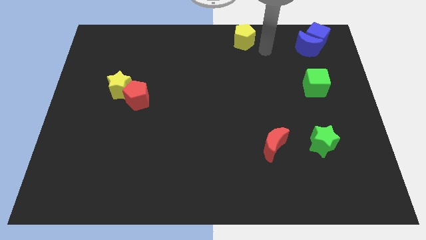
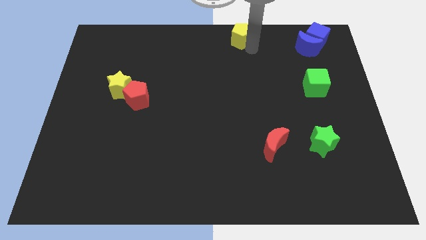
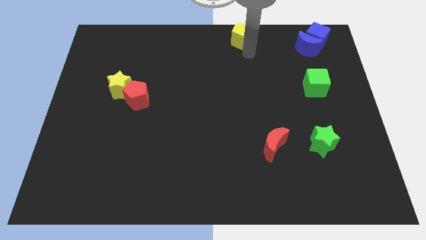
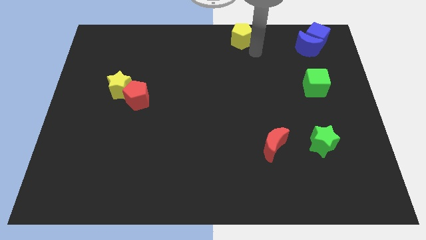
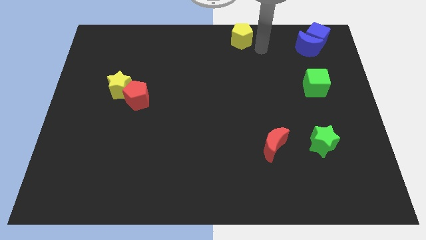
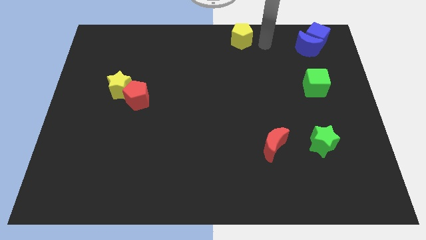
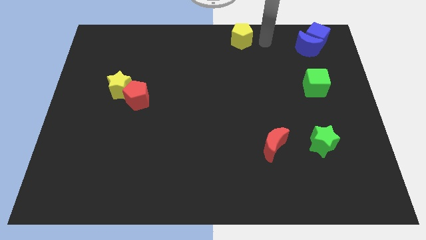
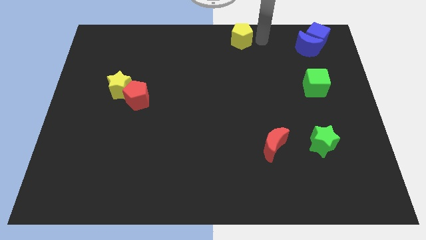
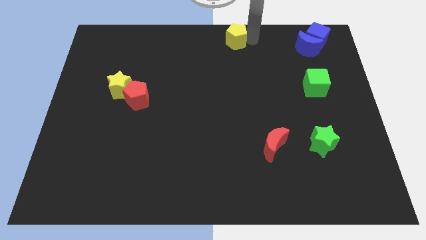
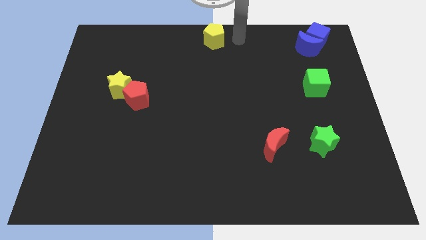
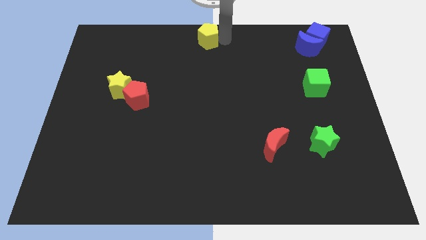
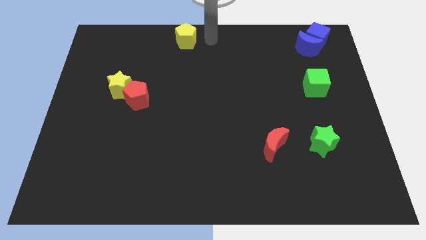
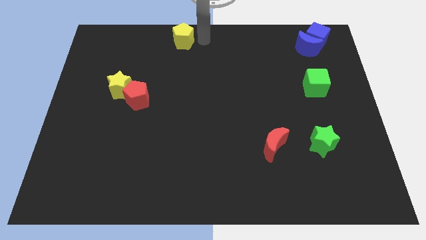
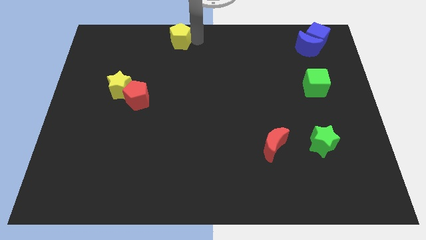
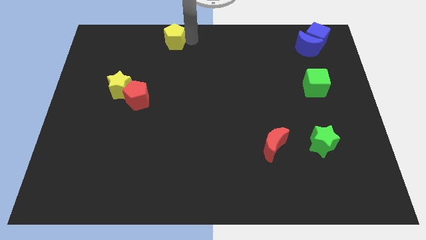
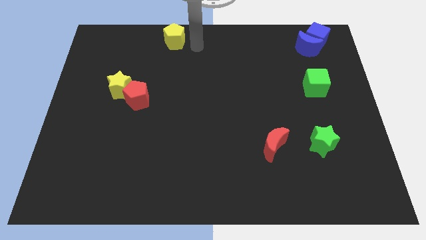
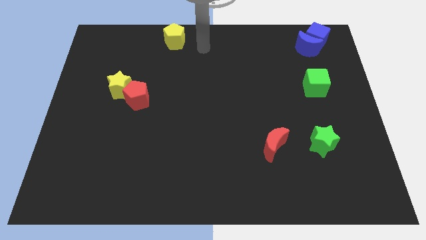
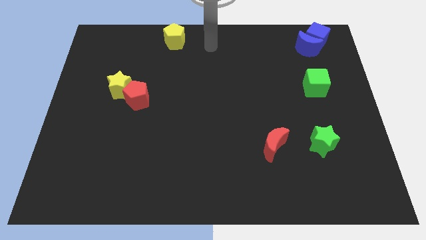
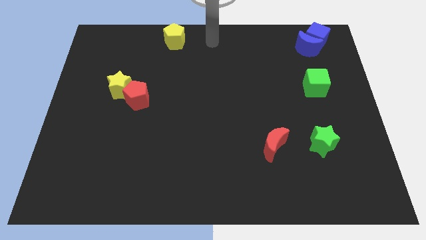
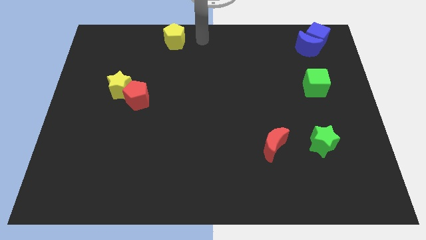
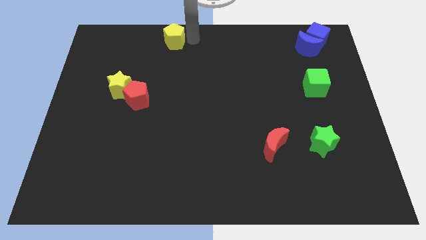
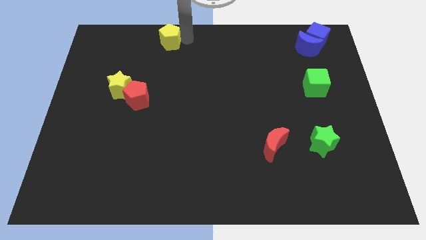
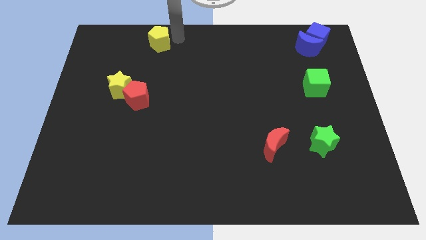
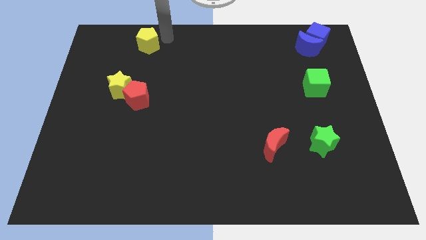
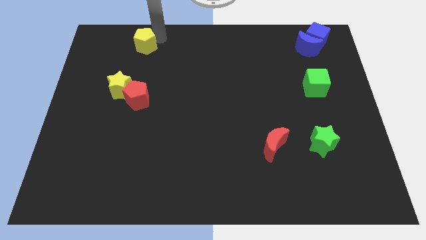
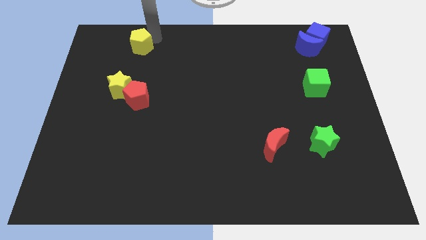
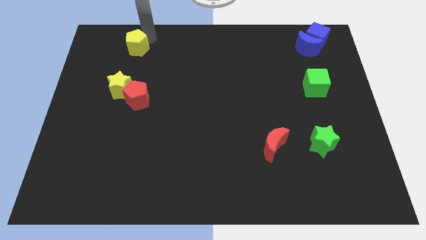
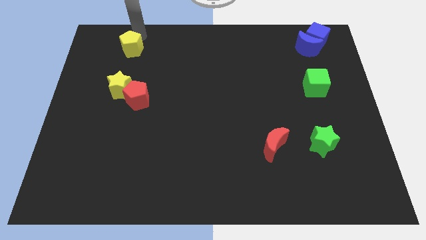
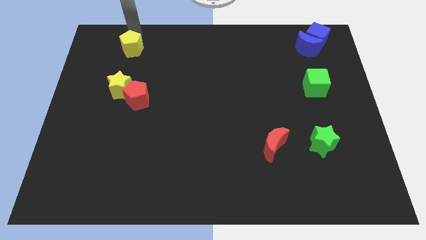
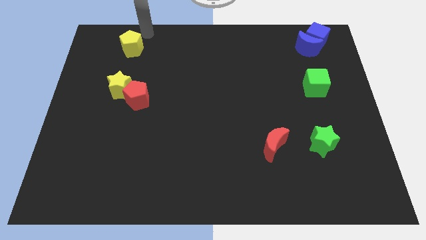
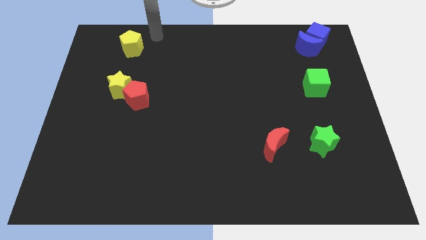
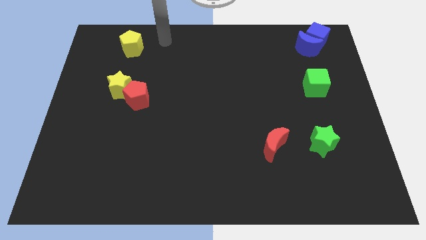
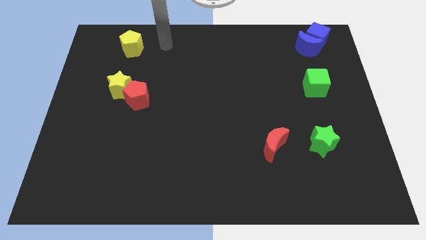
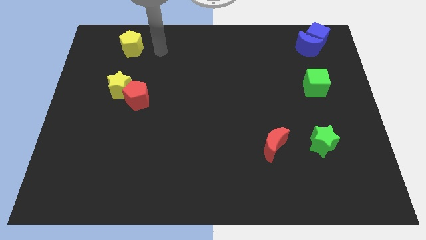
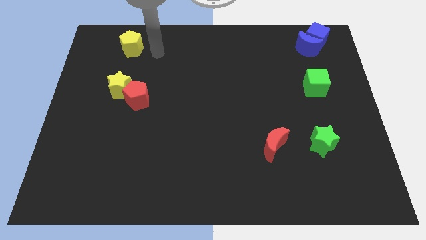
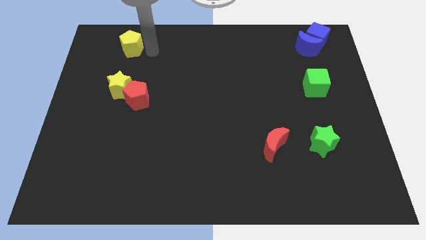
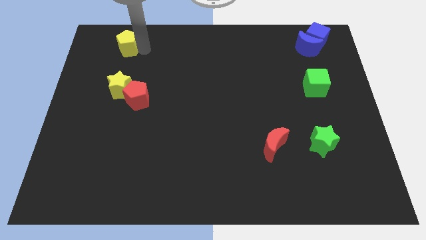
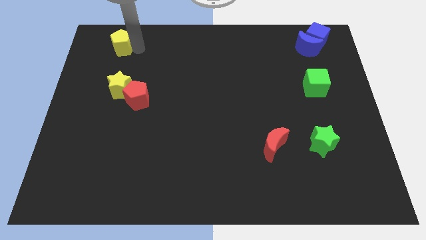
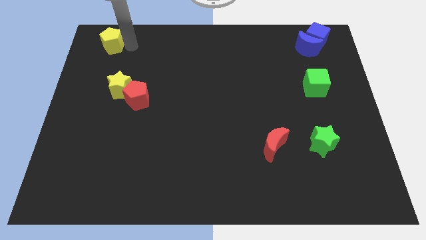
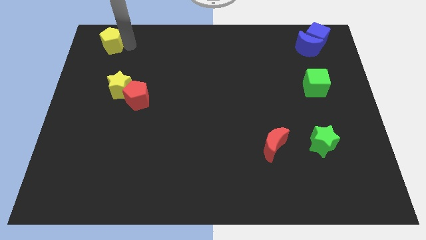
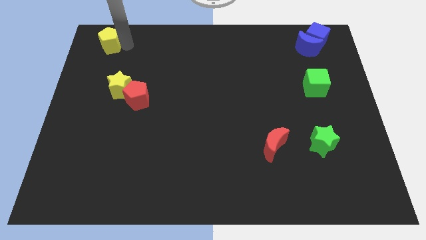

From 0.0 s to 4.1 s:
push yellow pentagon towards top left

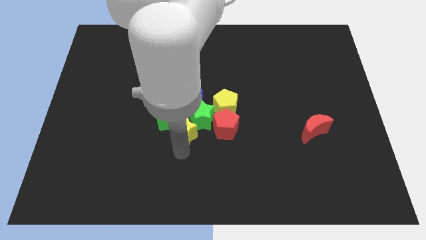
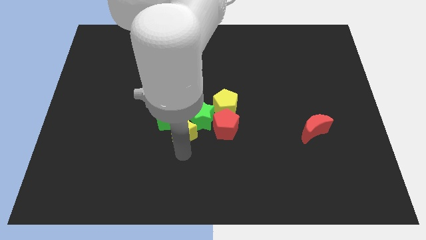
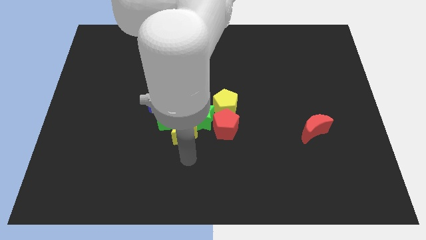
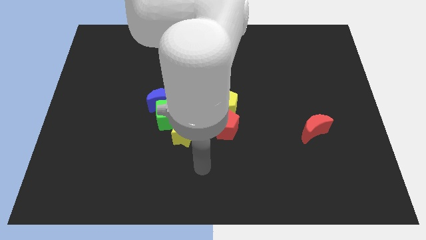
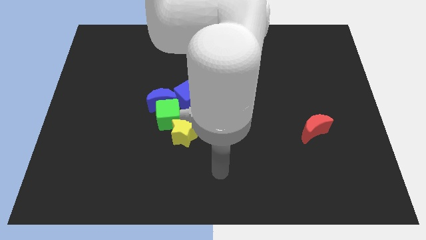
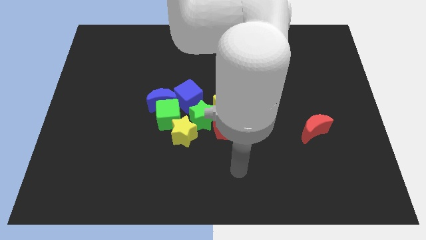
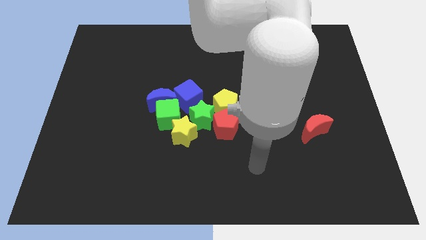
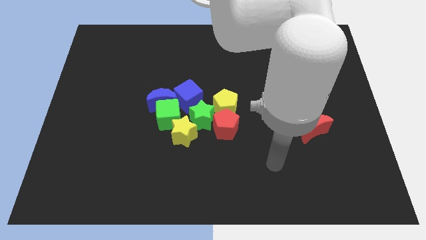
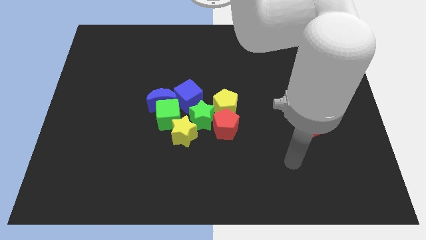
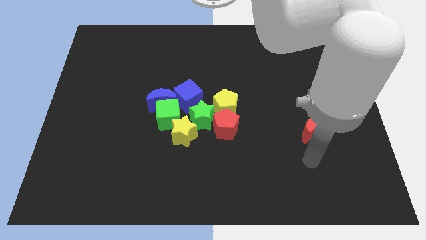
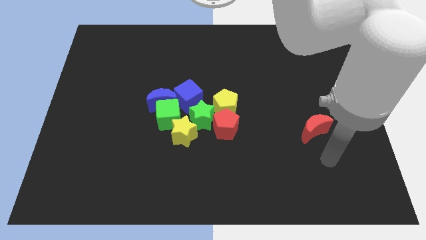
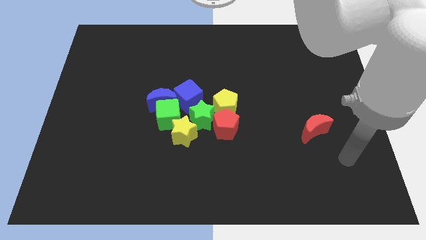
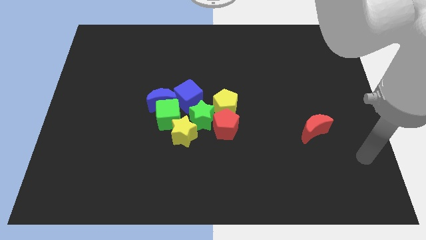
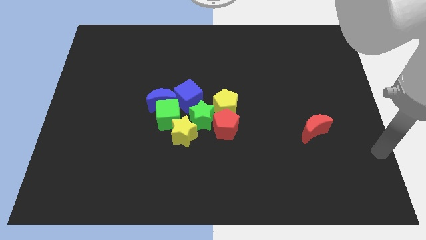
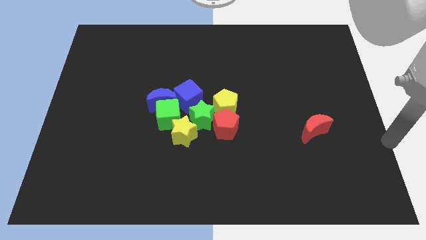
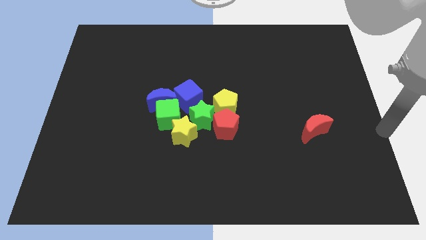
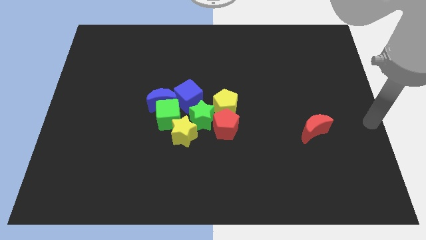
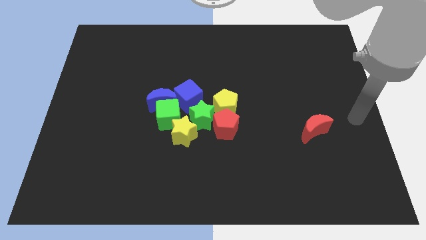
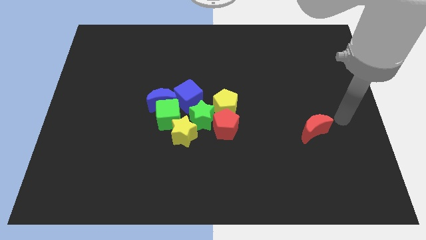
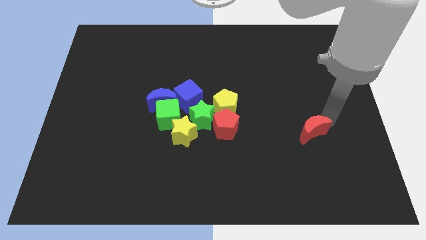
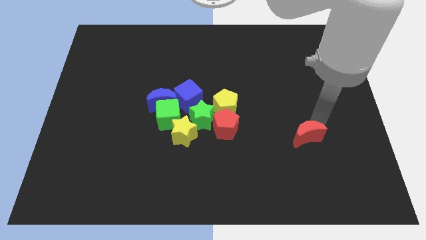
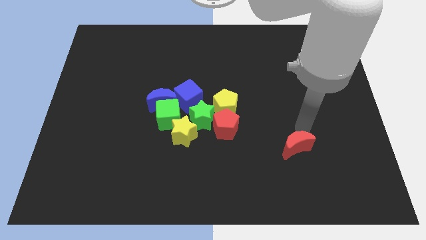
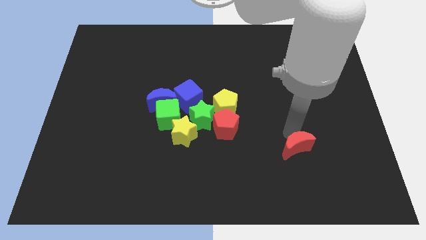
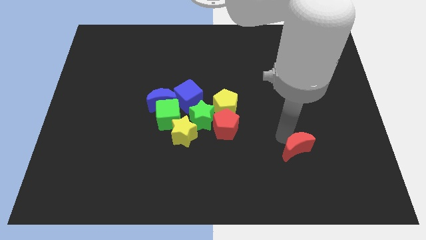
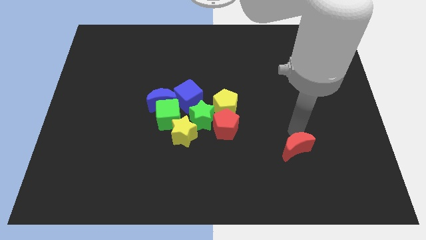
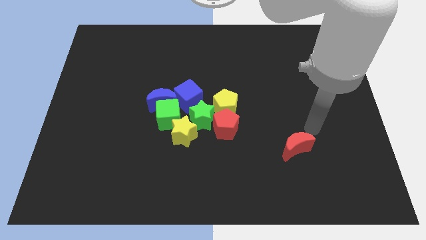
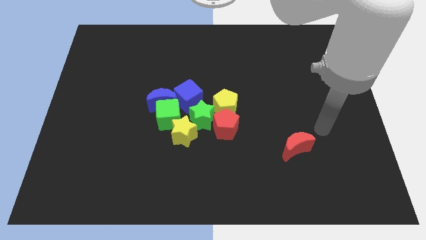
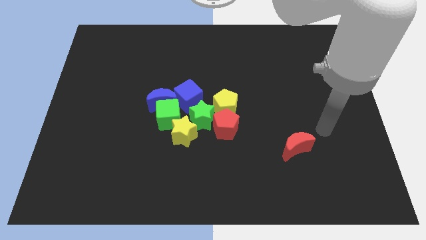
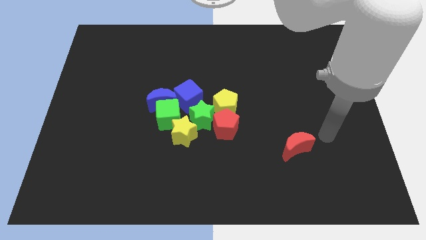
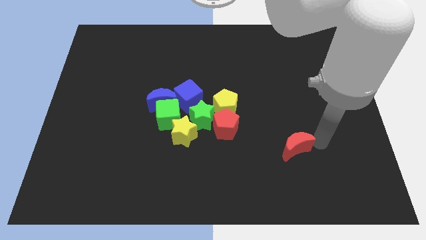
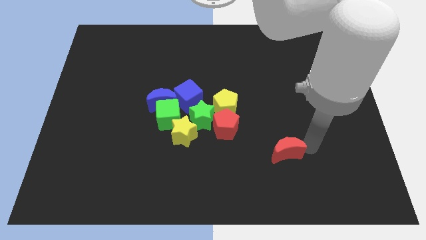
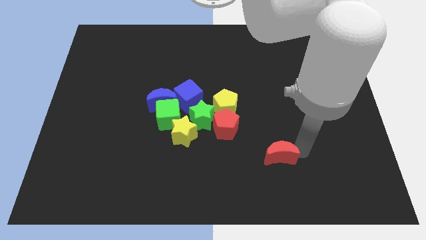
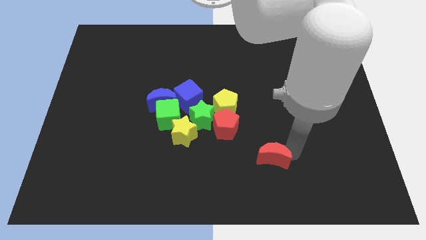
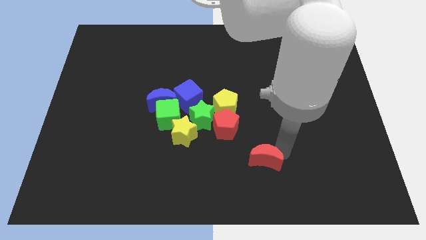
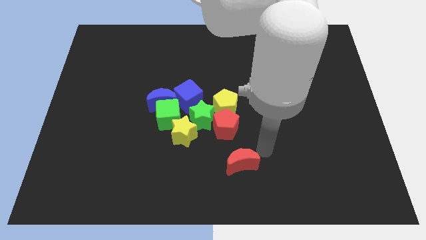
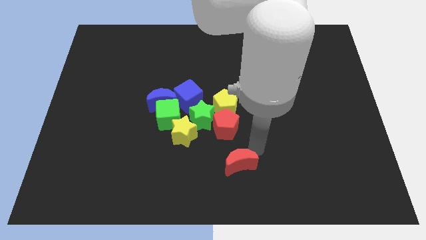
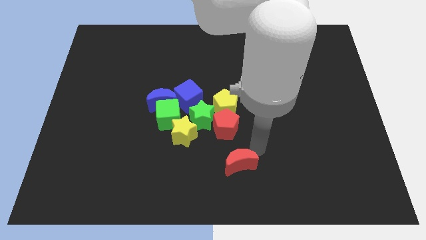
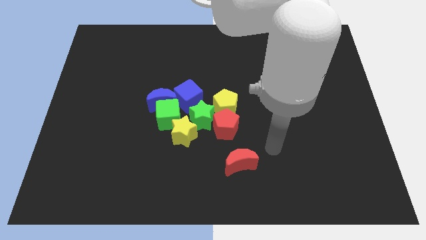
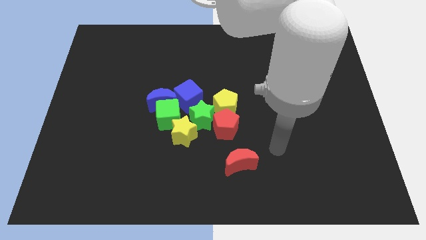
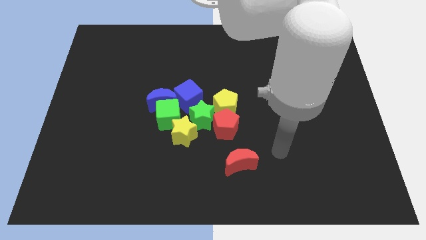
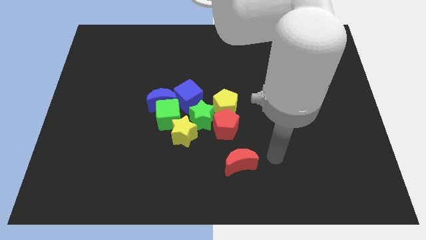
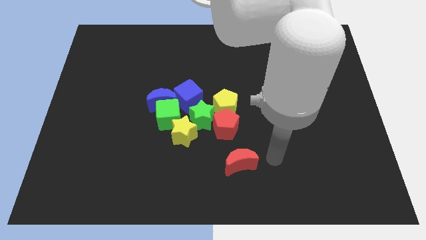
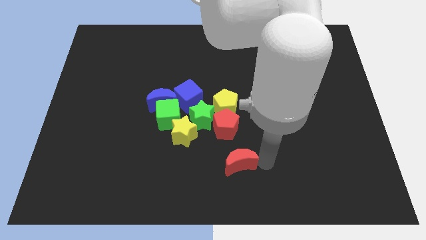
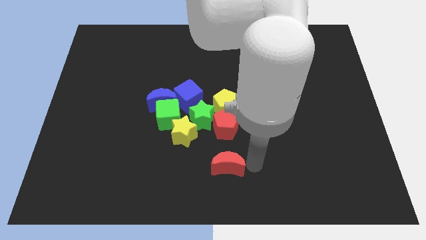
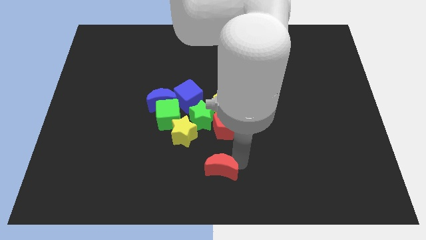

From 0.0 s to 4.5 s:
put the red moon at the bottom of red pentagon
